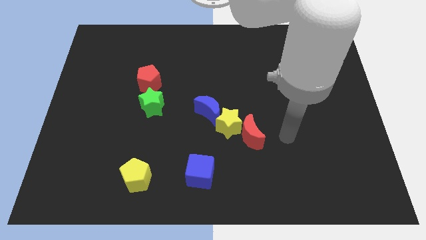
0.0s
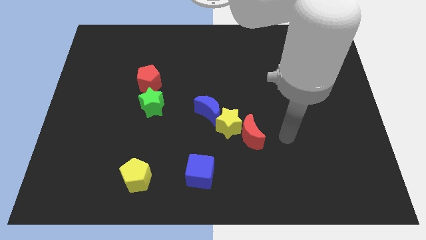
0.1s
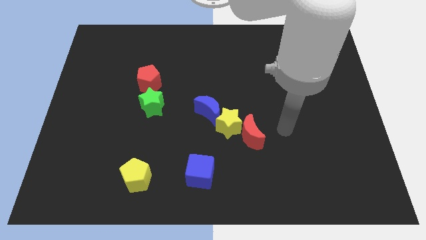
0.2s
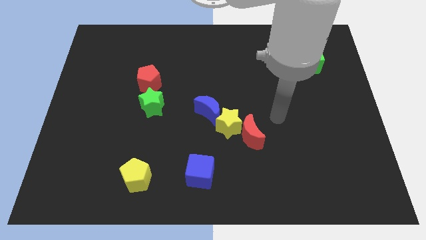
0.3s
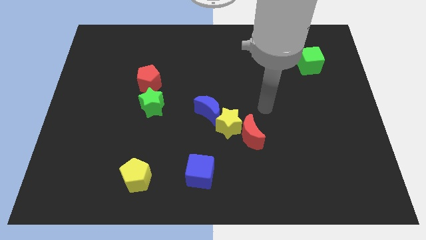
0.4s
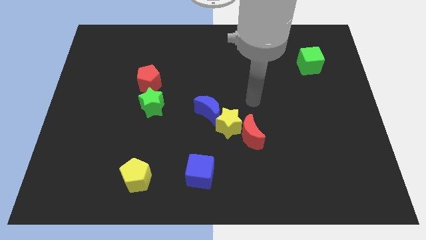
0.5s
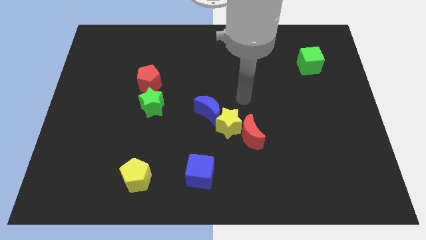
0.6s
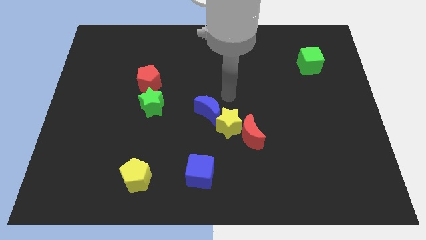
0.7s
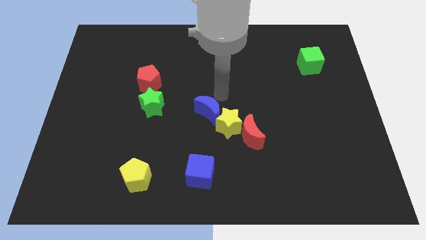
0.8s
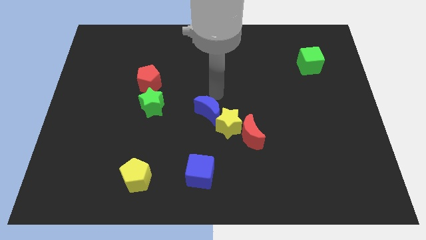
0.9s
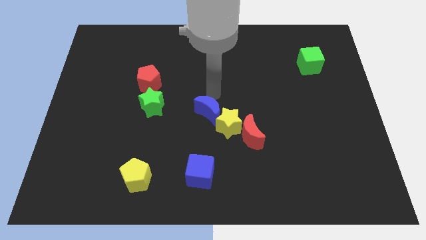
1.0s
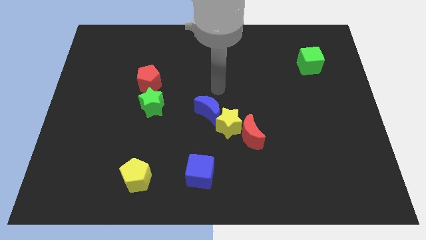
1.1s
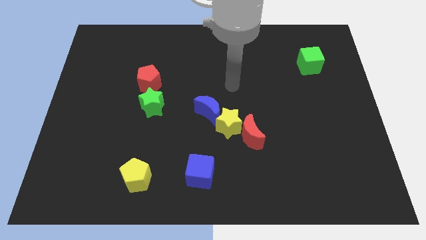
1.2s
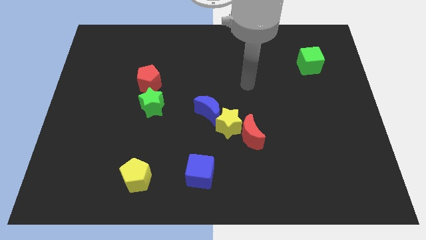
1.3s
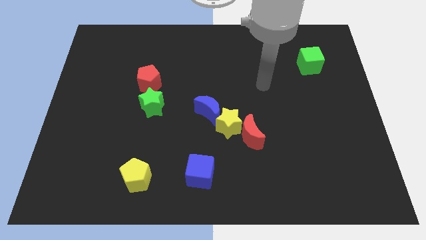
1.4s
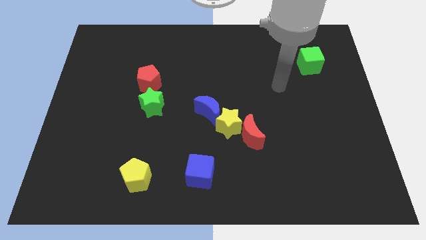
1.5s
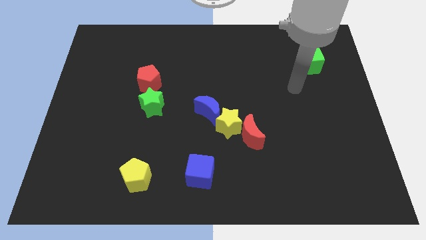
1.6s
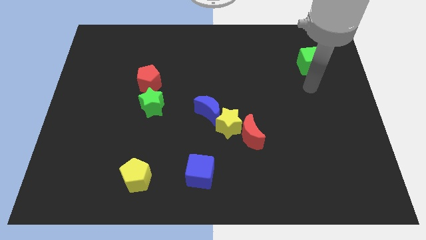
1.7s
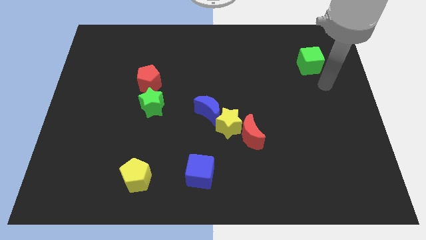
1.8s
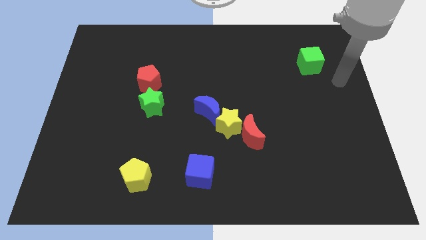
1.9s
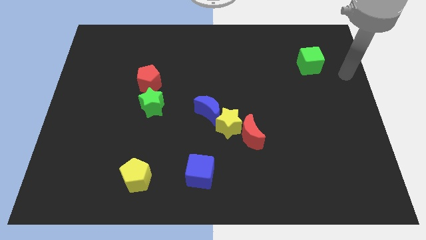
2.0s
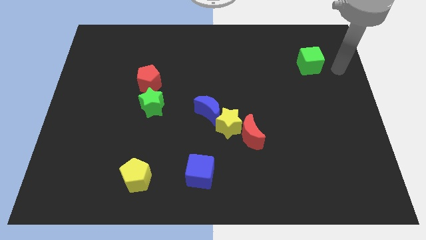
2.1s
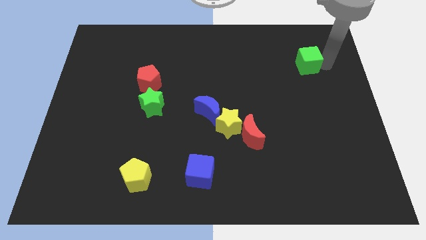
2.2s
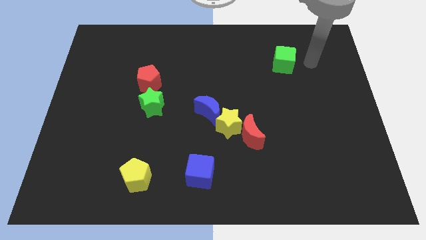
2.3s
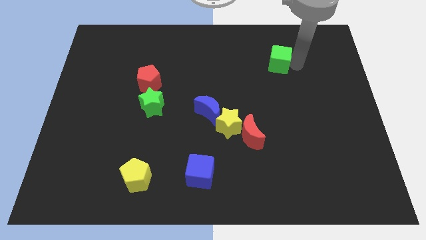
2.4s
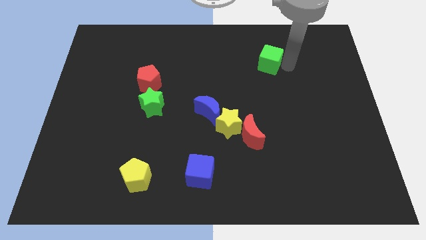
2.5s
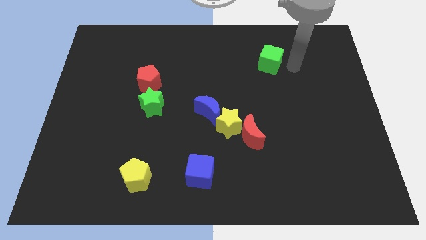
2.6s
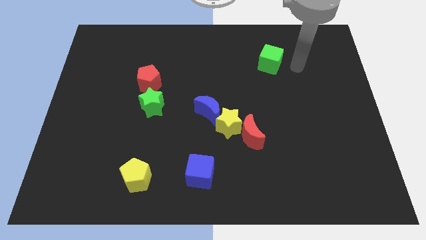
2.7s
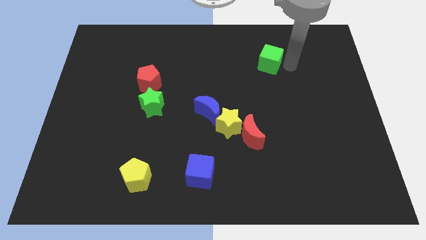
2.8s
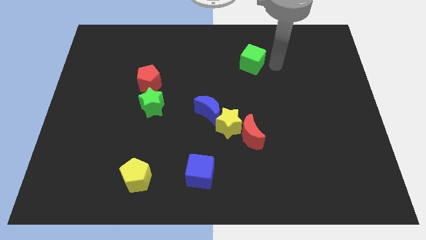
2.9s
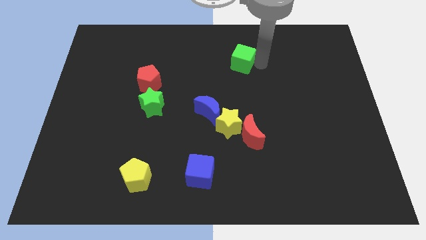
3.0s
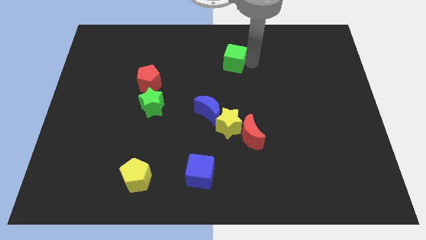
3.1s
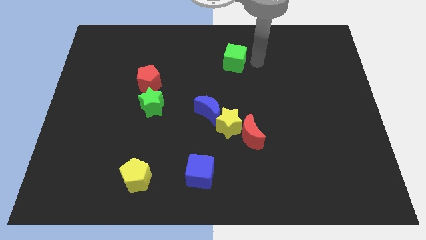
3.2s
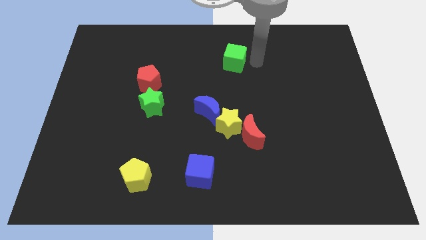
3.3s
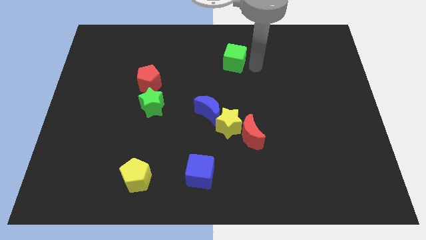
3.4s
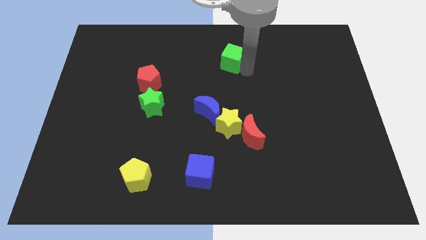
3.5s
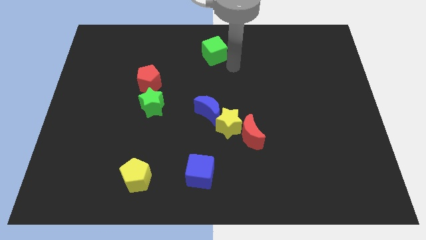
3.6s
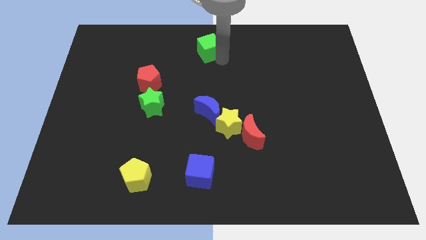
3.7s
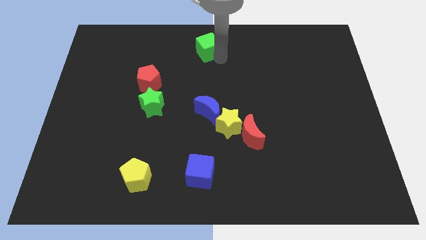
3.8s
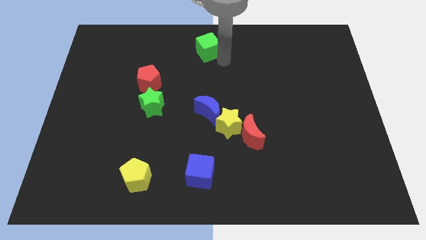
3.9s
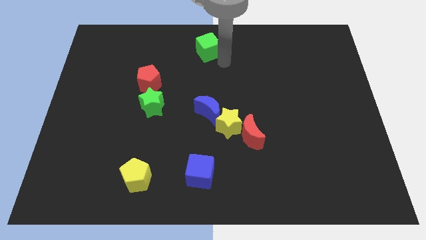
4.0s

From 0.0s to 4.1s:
move the green cube above the blue moon at the center

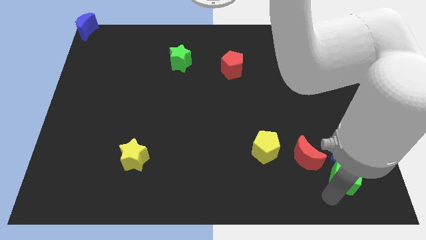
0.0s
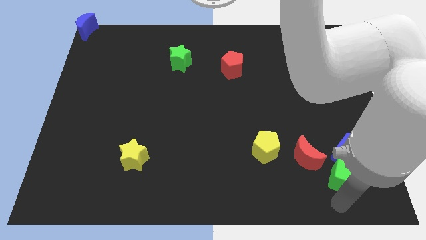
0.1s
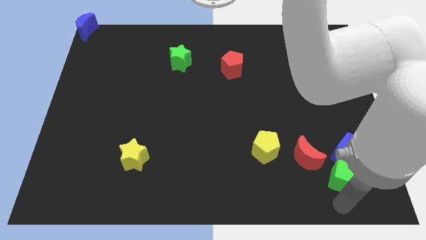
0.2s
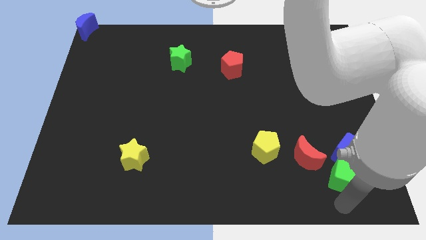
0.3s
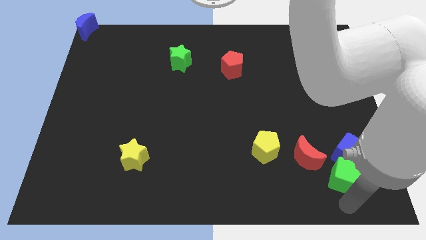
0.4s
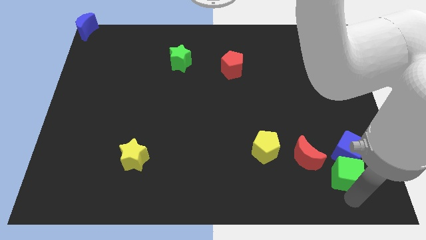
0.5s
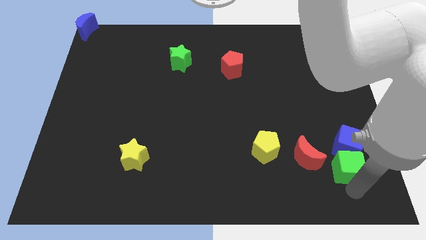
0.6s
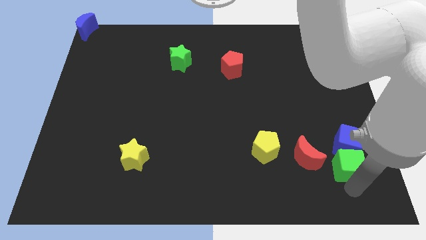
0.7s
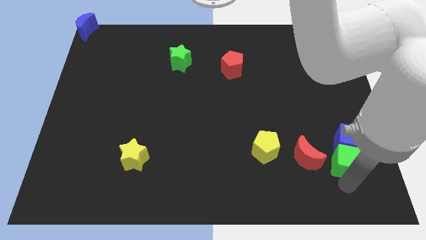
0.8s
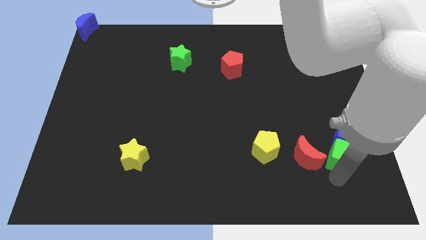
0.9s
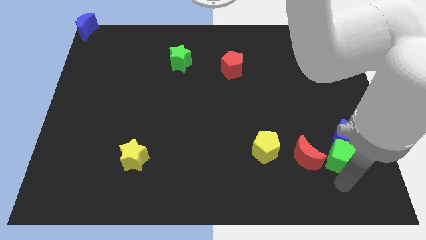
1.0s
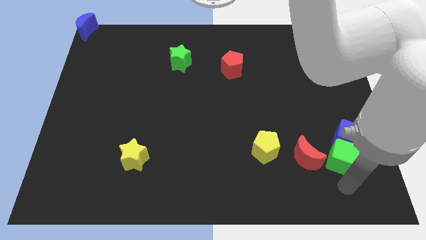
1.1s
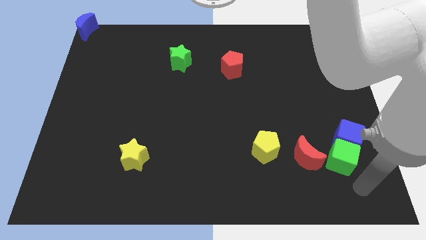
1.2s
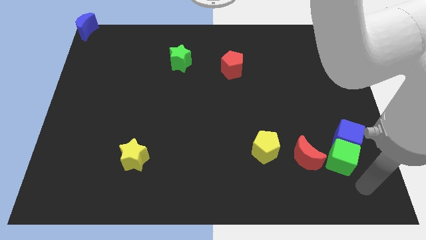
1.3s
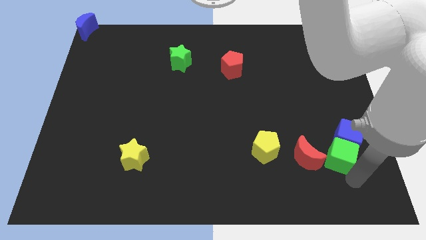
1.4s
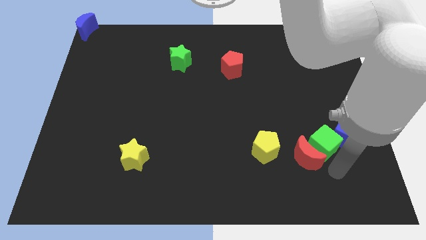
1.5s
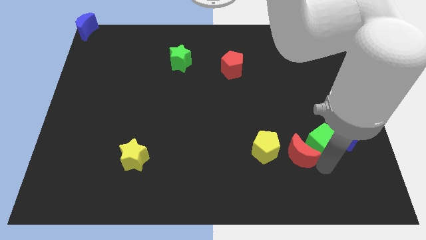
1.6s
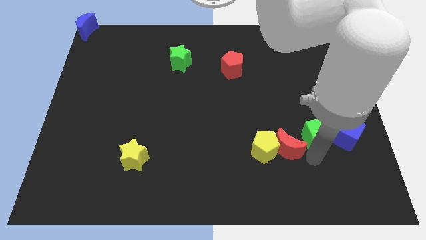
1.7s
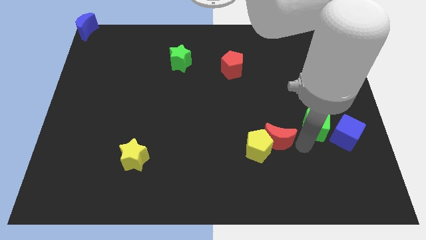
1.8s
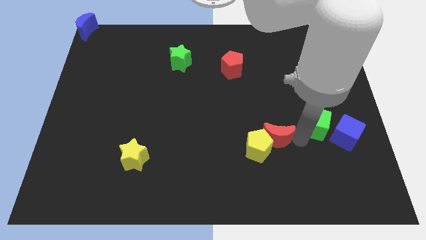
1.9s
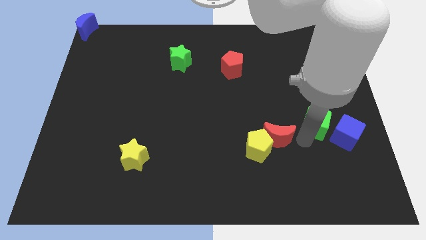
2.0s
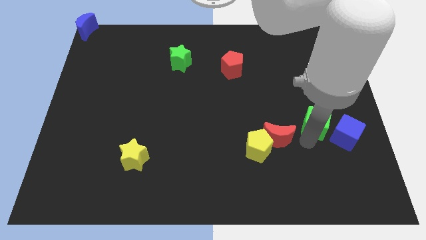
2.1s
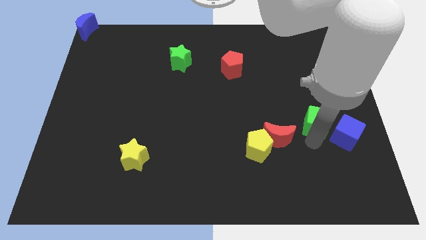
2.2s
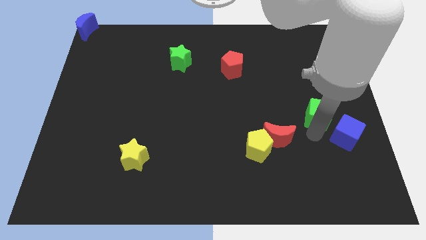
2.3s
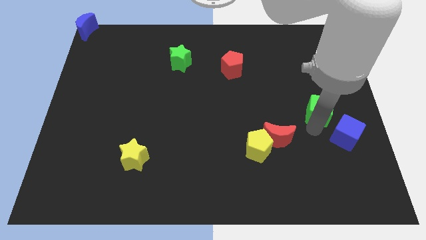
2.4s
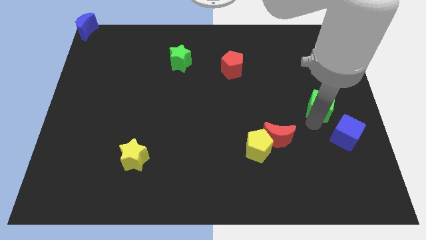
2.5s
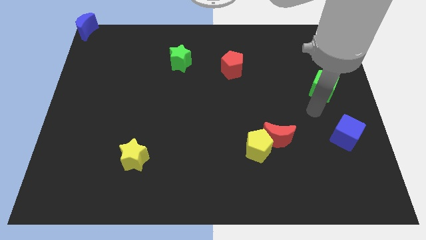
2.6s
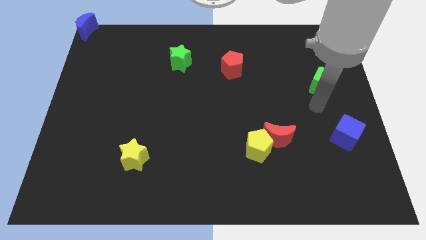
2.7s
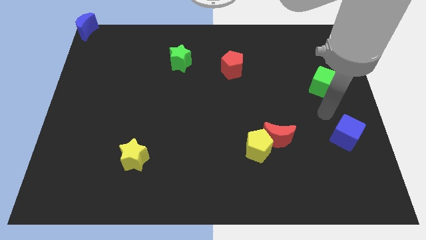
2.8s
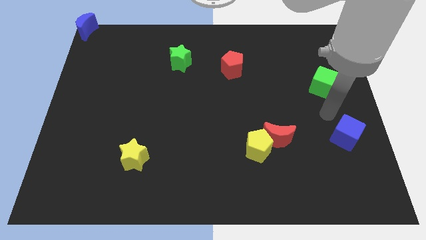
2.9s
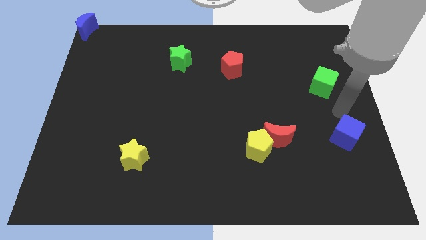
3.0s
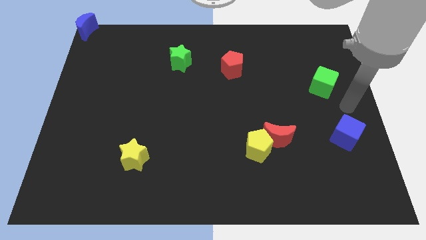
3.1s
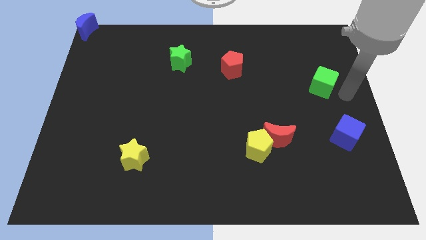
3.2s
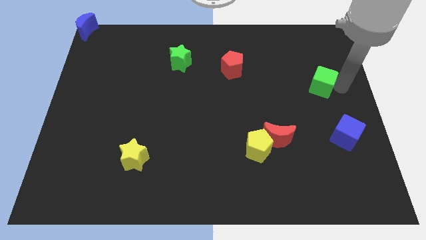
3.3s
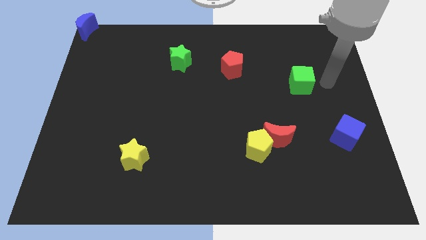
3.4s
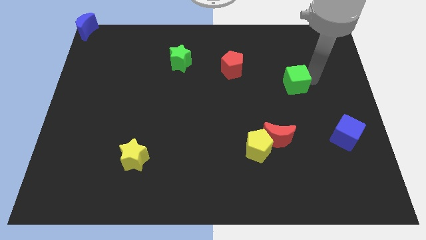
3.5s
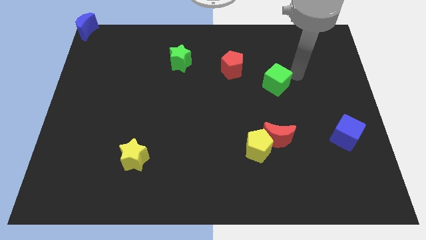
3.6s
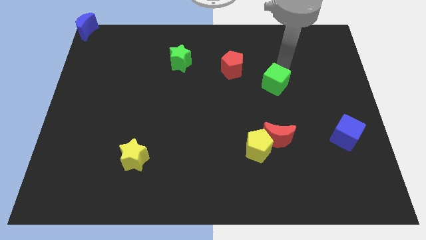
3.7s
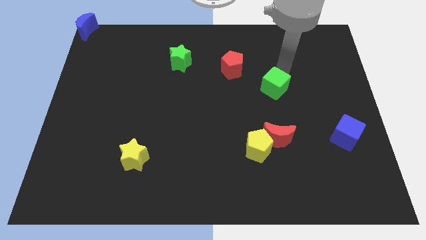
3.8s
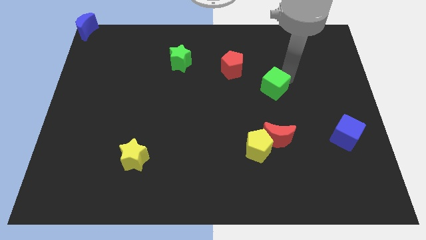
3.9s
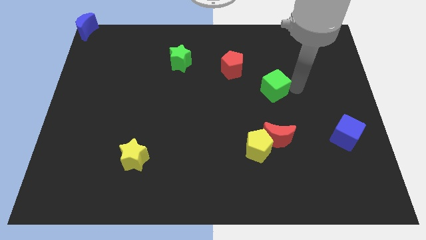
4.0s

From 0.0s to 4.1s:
place green cube above red moon

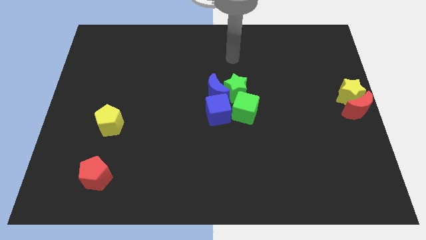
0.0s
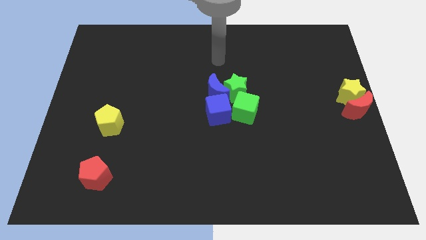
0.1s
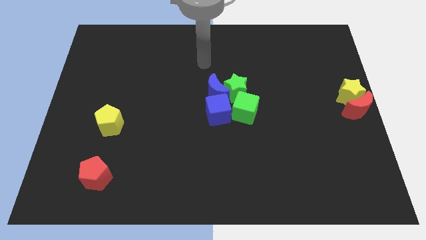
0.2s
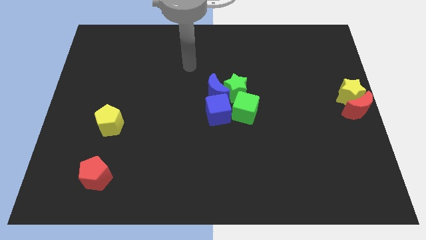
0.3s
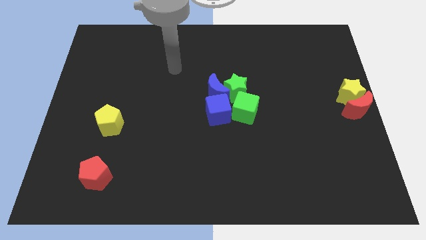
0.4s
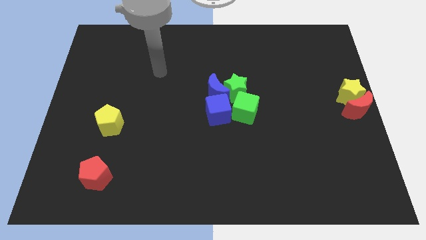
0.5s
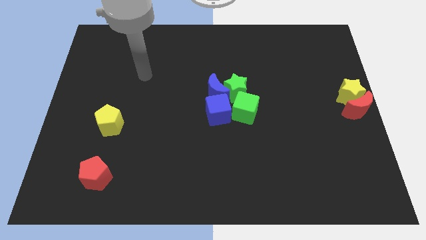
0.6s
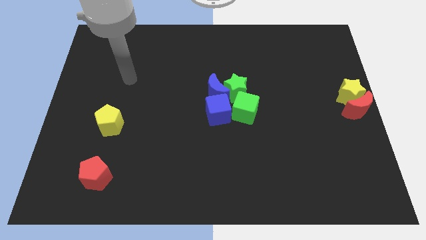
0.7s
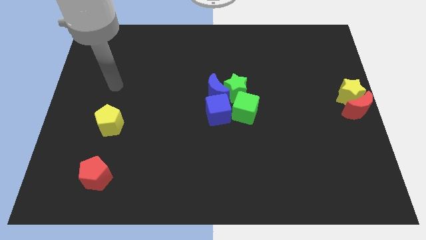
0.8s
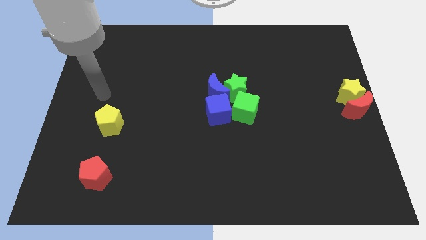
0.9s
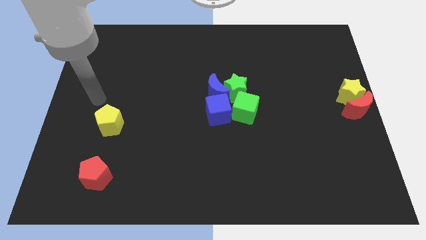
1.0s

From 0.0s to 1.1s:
move your arm to the top of yellow pentagon
